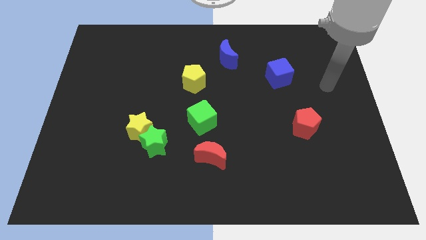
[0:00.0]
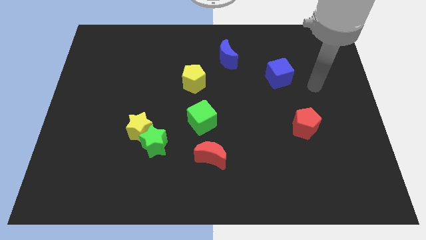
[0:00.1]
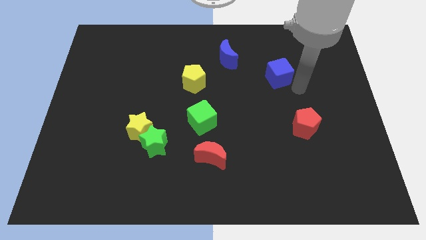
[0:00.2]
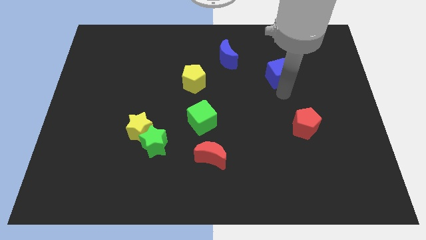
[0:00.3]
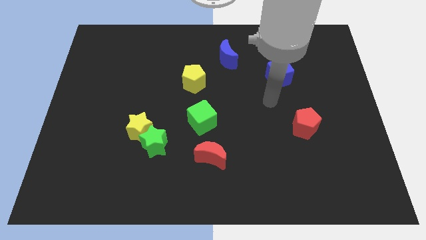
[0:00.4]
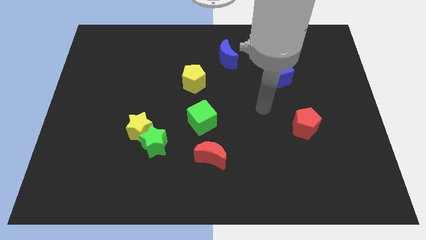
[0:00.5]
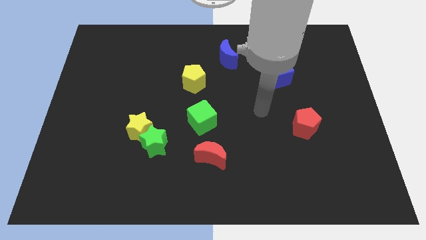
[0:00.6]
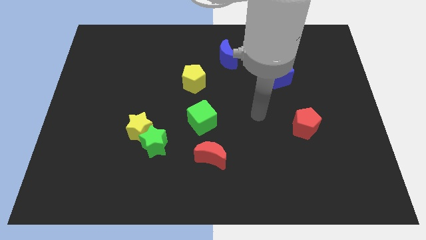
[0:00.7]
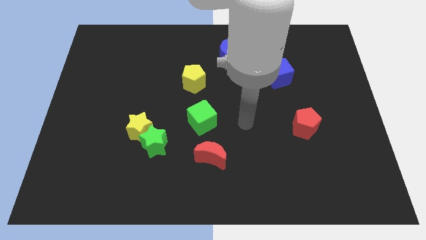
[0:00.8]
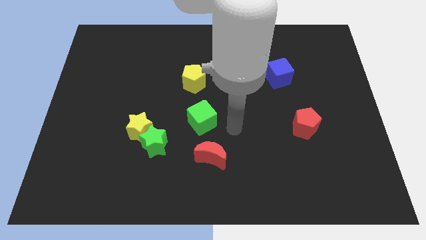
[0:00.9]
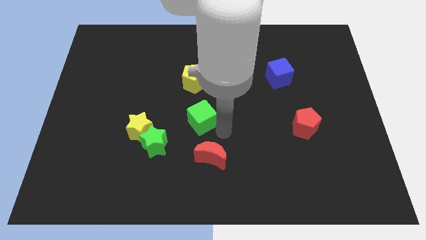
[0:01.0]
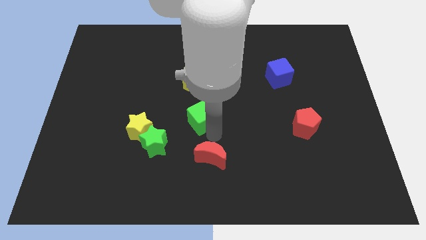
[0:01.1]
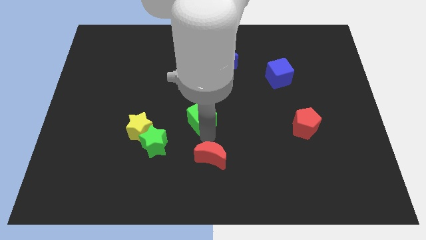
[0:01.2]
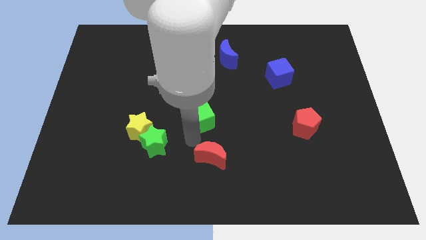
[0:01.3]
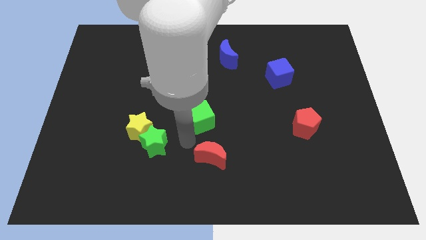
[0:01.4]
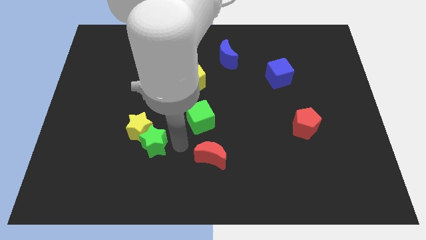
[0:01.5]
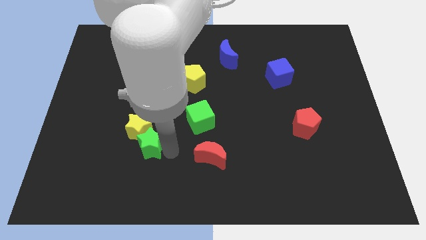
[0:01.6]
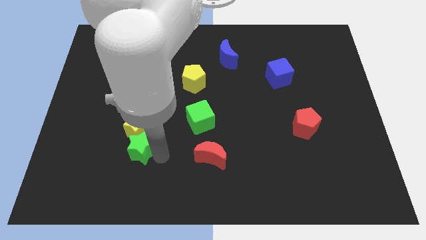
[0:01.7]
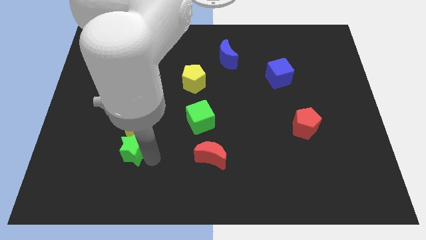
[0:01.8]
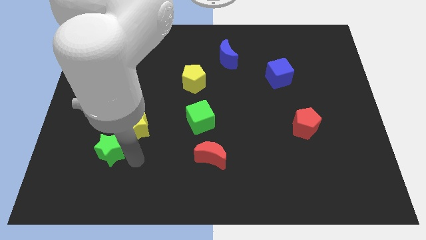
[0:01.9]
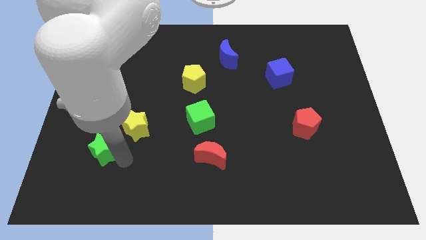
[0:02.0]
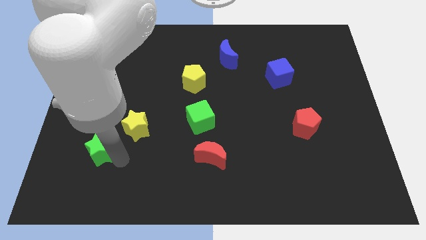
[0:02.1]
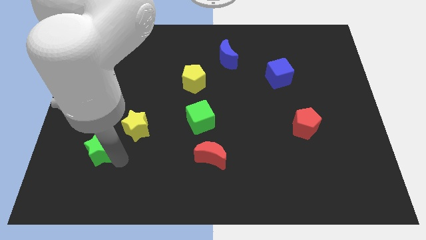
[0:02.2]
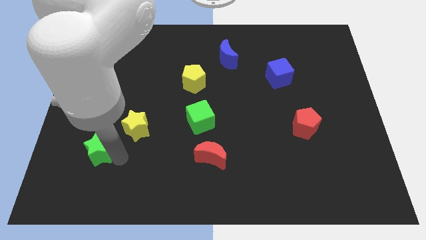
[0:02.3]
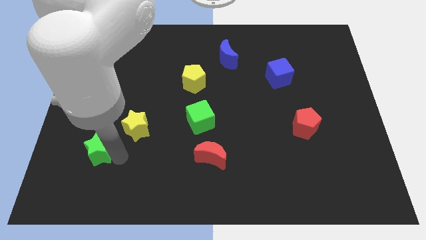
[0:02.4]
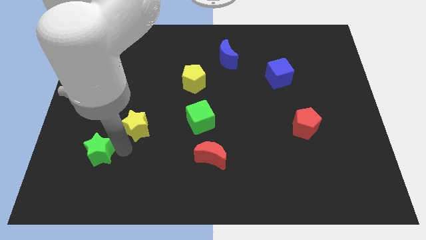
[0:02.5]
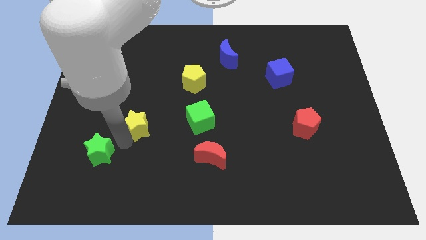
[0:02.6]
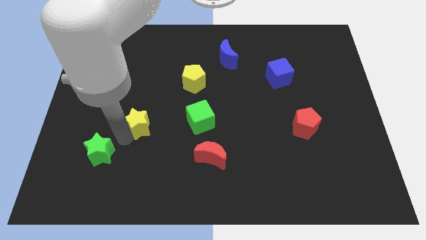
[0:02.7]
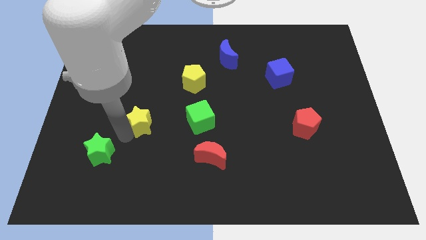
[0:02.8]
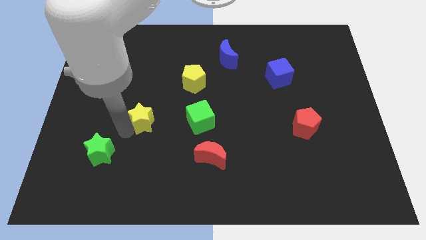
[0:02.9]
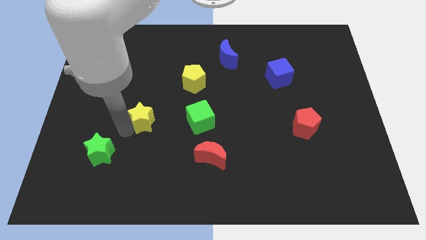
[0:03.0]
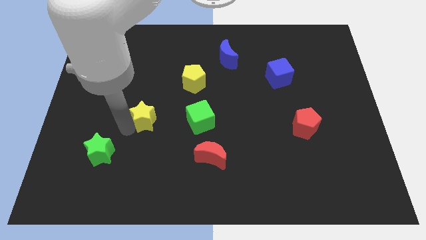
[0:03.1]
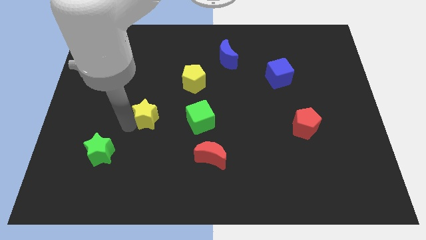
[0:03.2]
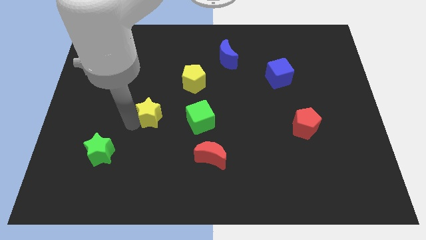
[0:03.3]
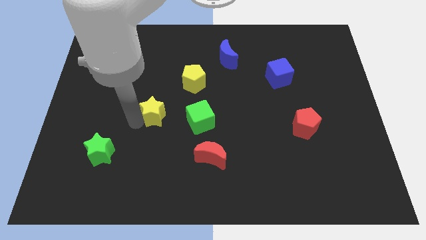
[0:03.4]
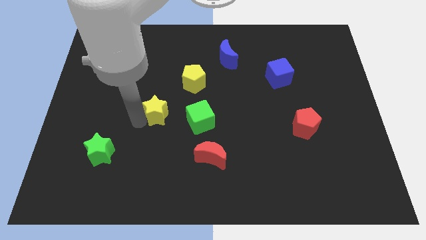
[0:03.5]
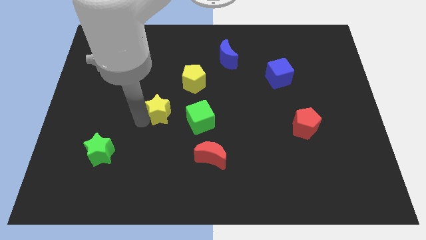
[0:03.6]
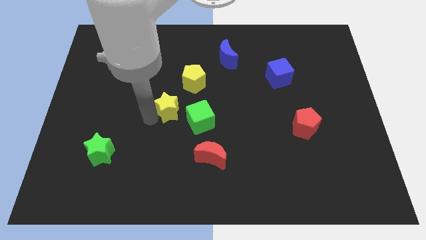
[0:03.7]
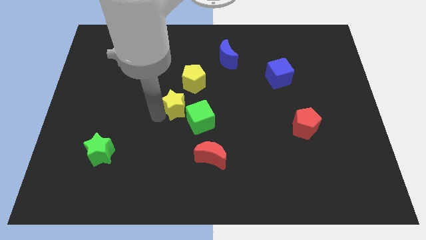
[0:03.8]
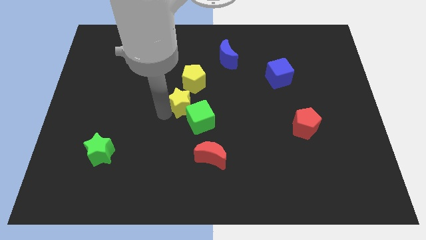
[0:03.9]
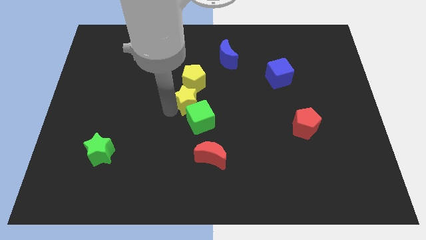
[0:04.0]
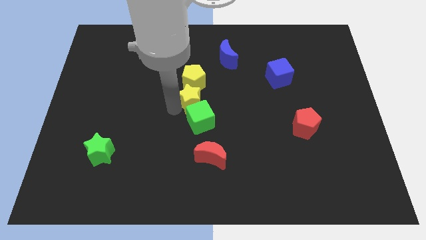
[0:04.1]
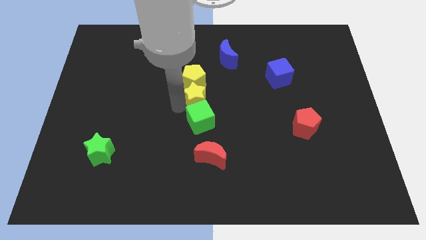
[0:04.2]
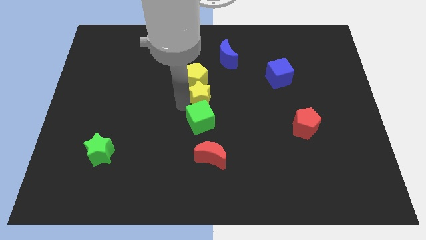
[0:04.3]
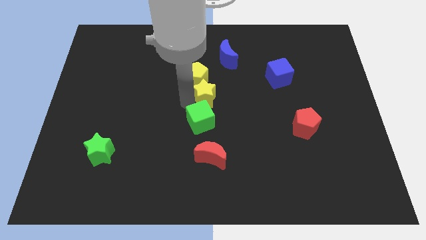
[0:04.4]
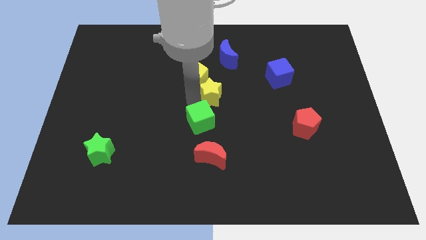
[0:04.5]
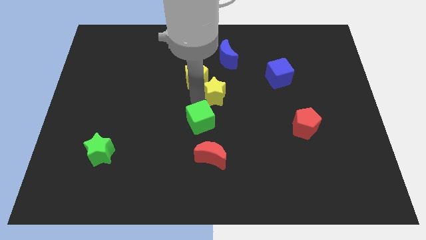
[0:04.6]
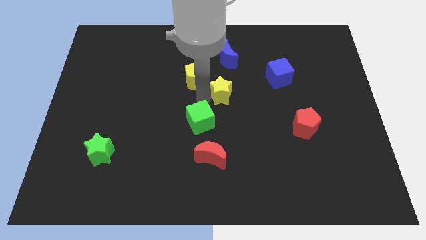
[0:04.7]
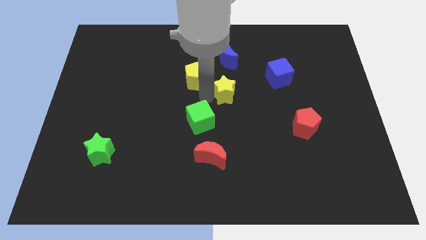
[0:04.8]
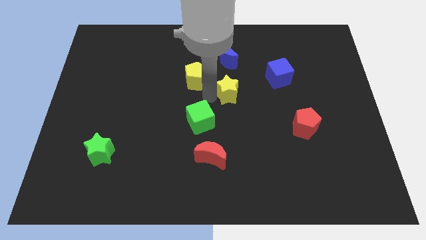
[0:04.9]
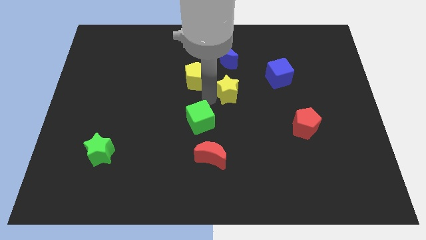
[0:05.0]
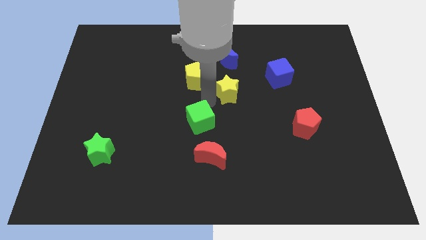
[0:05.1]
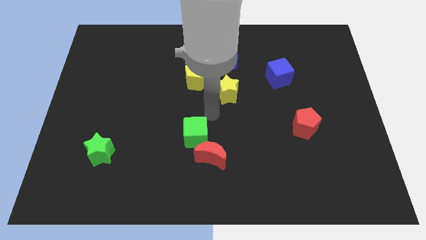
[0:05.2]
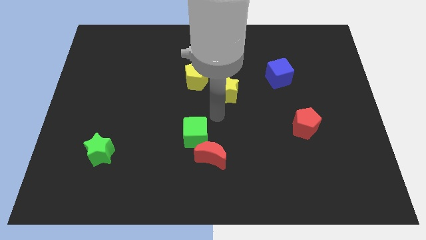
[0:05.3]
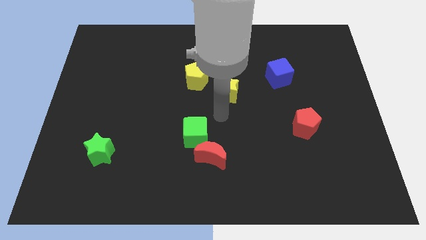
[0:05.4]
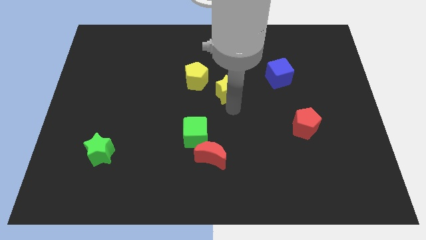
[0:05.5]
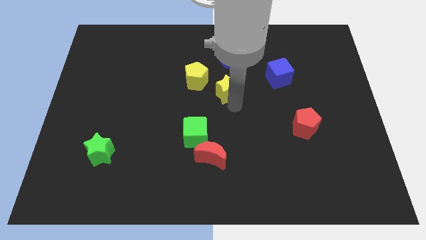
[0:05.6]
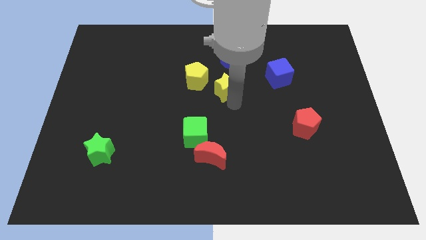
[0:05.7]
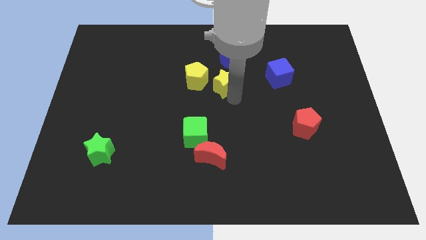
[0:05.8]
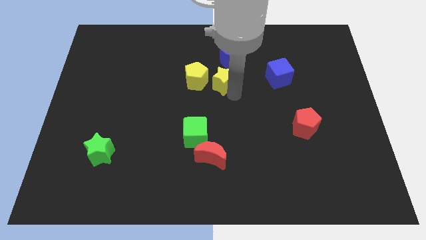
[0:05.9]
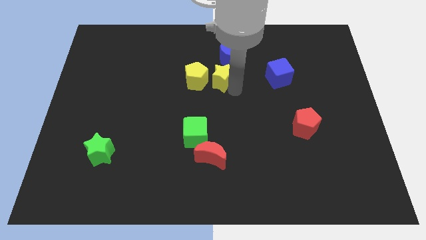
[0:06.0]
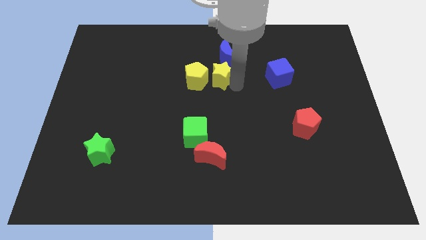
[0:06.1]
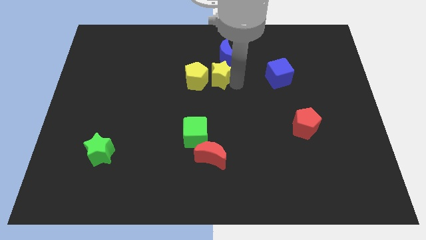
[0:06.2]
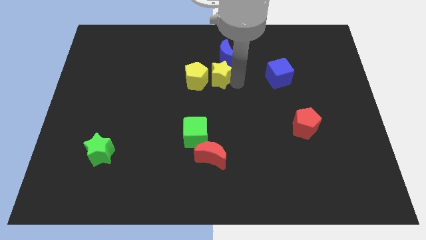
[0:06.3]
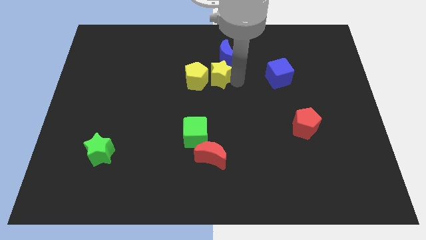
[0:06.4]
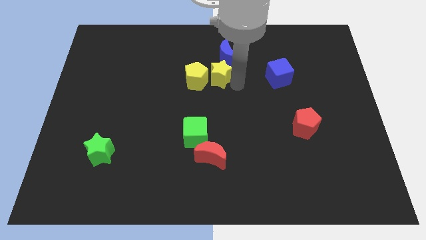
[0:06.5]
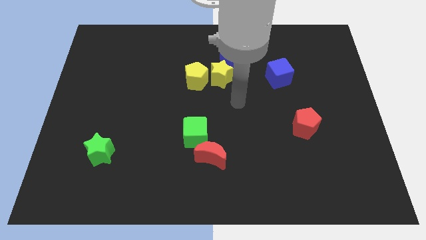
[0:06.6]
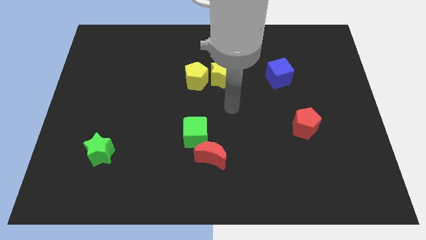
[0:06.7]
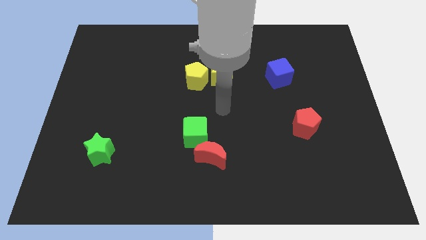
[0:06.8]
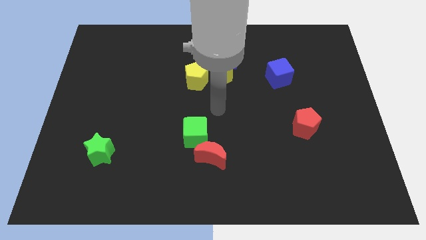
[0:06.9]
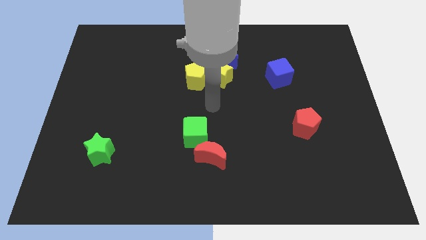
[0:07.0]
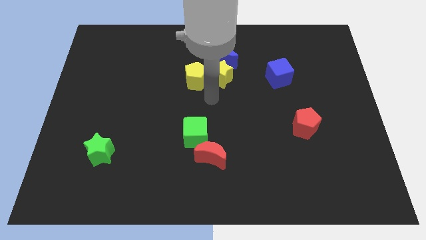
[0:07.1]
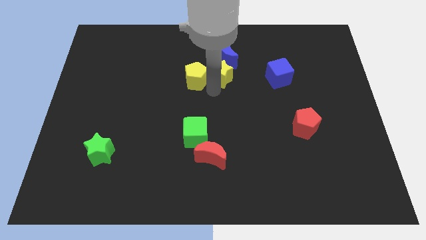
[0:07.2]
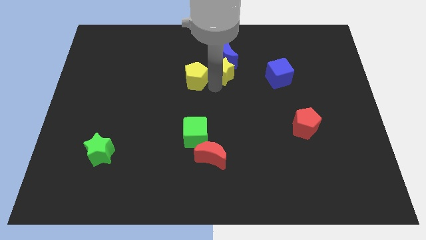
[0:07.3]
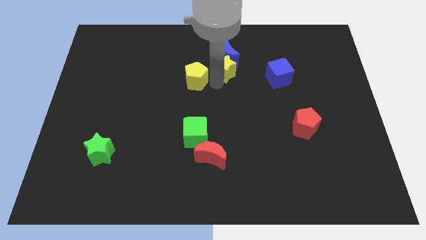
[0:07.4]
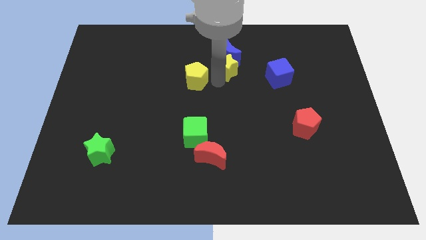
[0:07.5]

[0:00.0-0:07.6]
slide the yellow star close to the blue moon

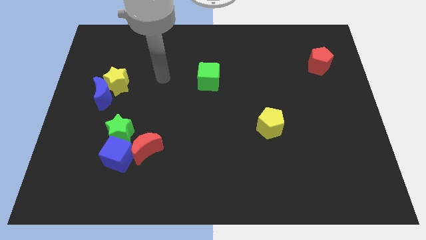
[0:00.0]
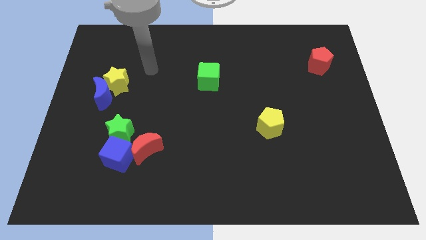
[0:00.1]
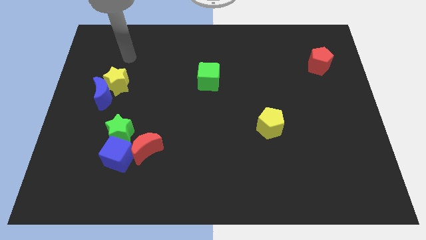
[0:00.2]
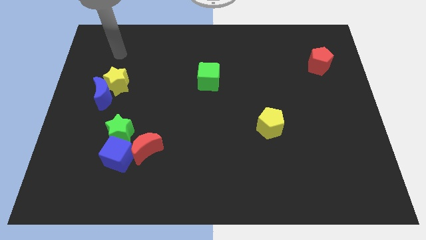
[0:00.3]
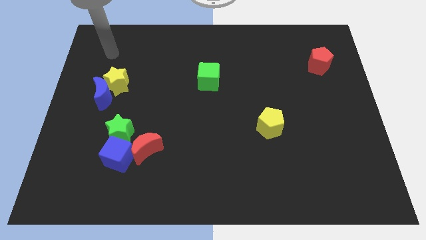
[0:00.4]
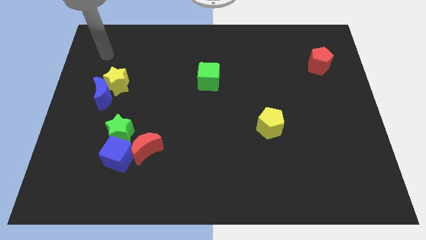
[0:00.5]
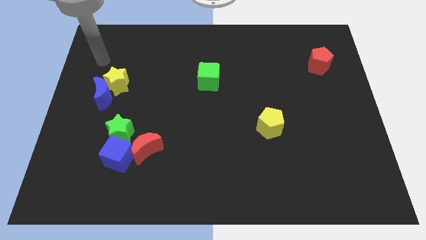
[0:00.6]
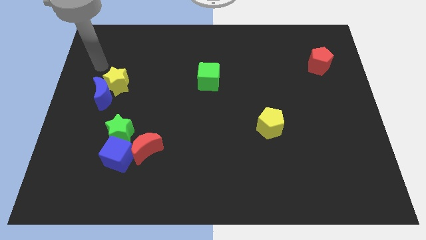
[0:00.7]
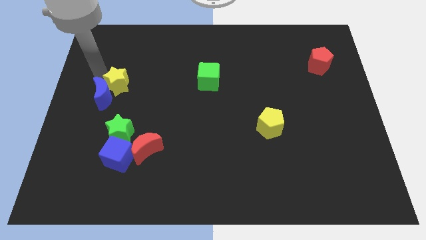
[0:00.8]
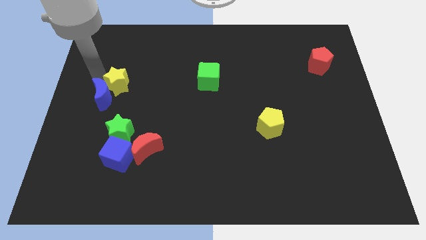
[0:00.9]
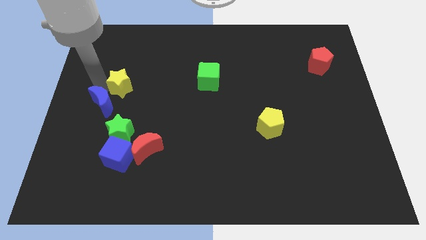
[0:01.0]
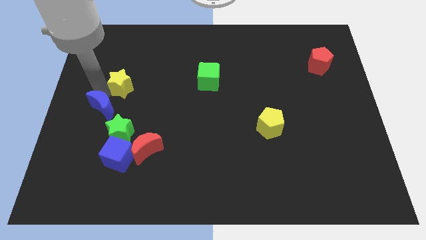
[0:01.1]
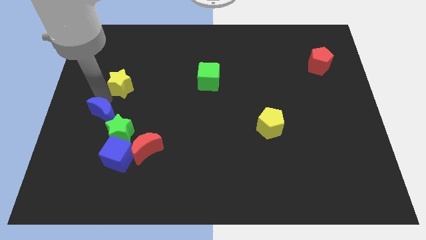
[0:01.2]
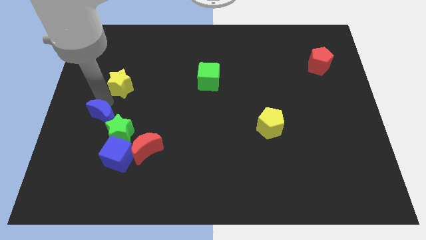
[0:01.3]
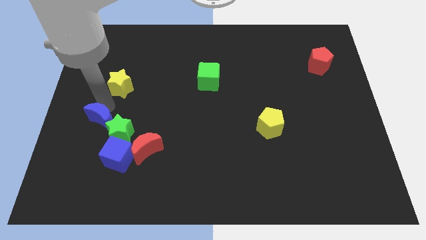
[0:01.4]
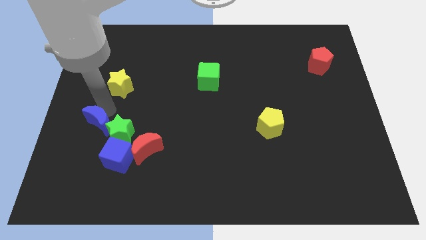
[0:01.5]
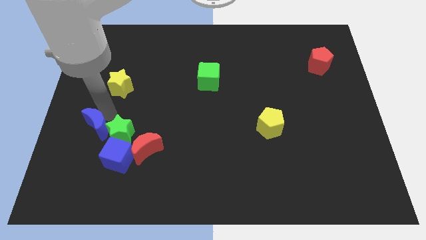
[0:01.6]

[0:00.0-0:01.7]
slide the blue moon close to the green star
